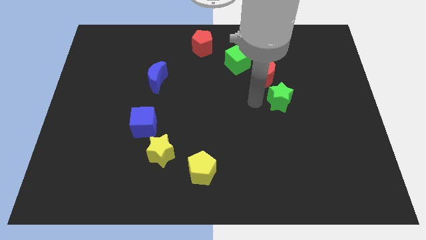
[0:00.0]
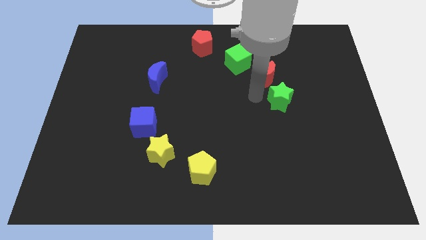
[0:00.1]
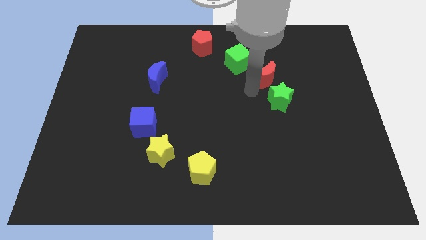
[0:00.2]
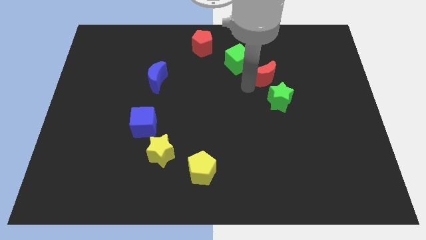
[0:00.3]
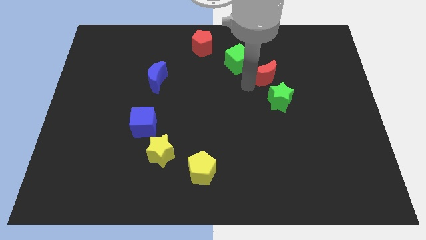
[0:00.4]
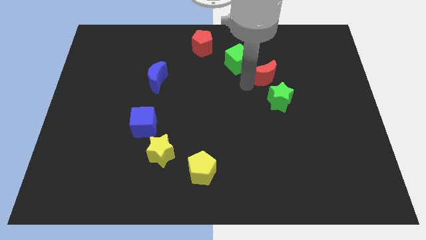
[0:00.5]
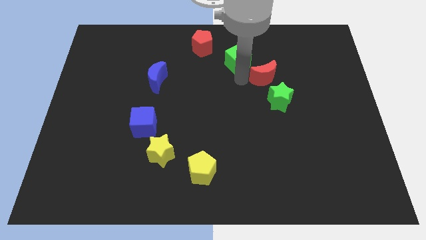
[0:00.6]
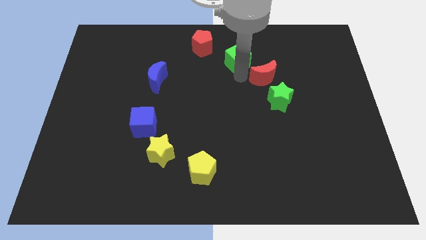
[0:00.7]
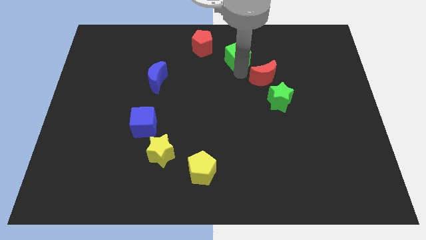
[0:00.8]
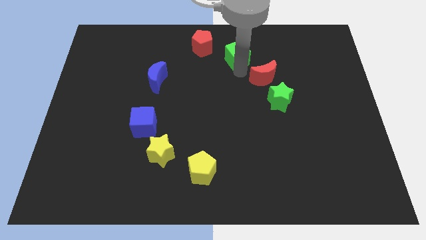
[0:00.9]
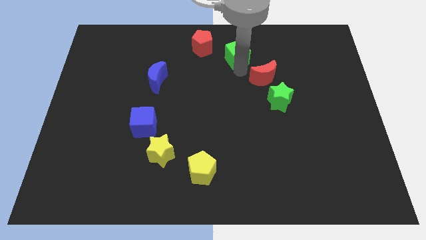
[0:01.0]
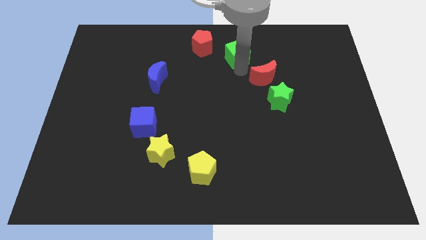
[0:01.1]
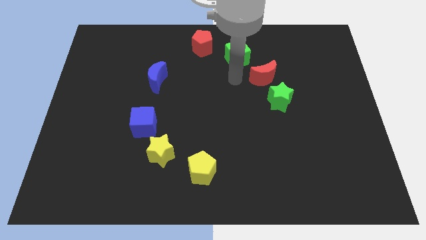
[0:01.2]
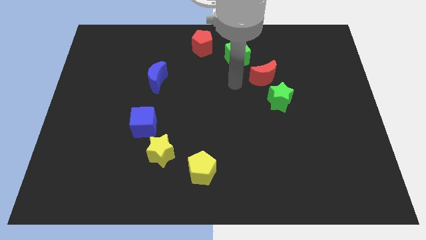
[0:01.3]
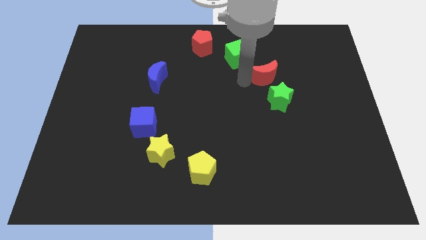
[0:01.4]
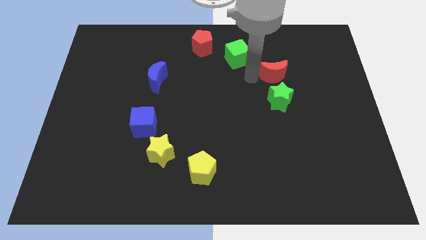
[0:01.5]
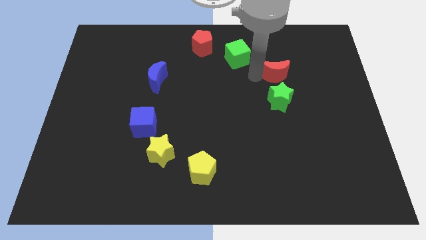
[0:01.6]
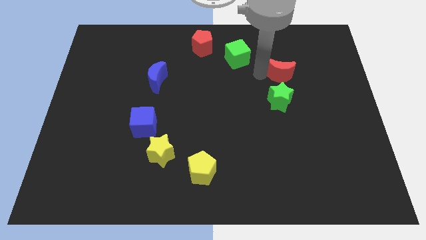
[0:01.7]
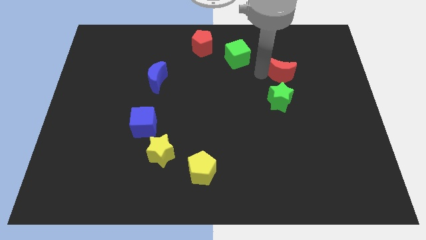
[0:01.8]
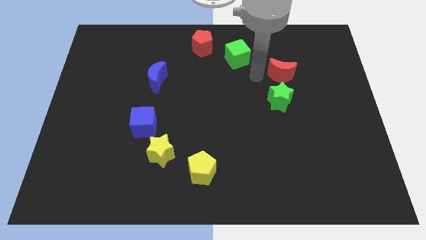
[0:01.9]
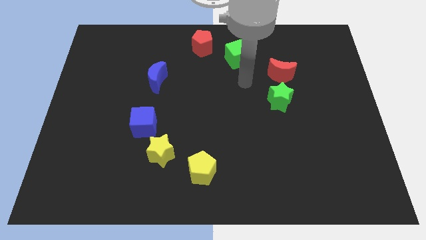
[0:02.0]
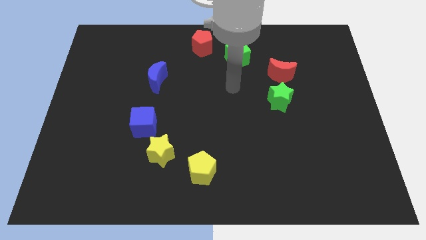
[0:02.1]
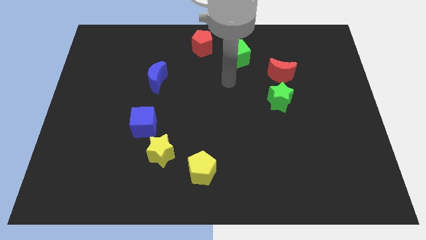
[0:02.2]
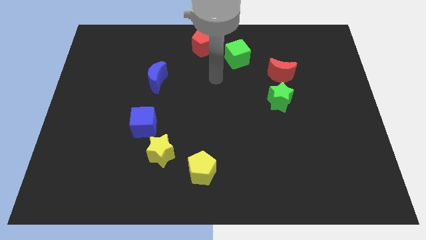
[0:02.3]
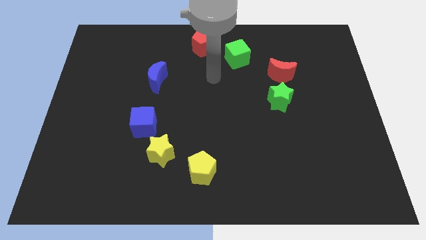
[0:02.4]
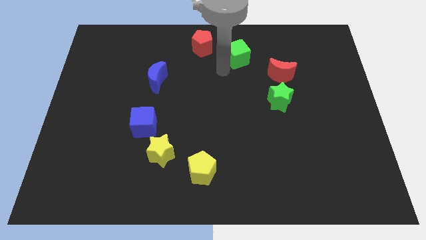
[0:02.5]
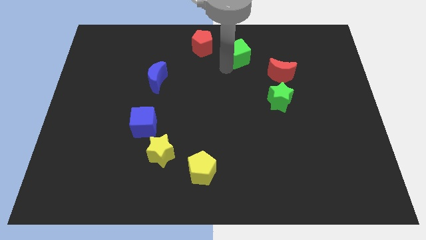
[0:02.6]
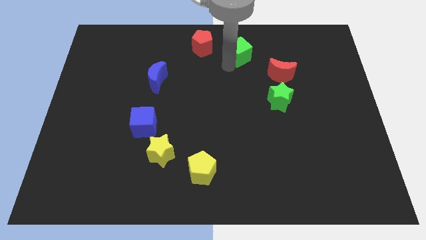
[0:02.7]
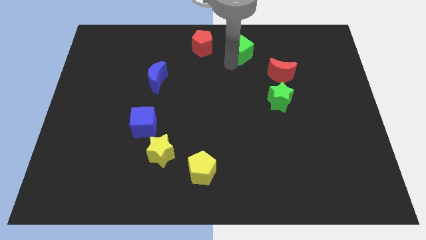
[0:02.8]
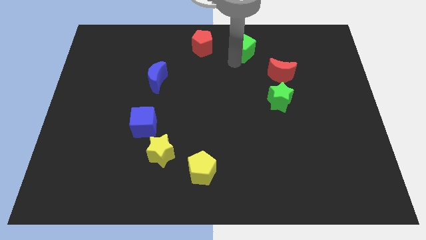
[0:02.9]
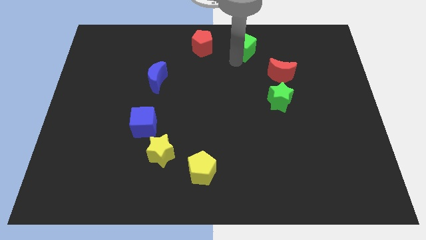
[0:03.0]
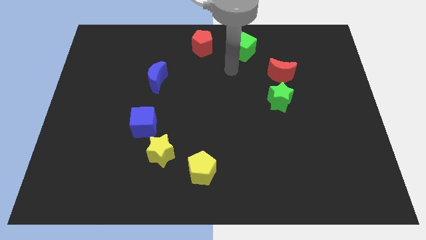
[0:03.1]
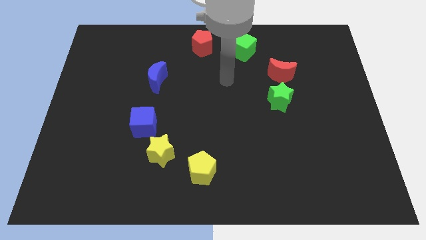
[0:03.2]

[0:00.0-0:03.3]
push the green cube slightly towards the top center

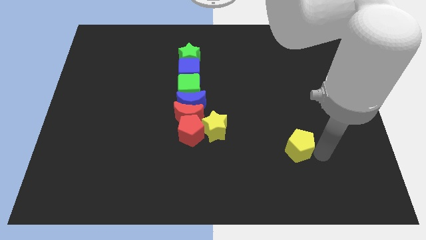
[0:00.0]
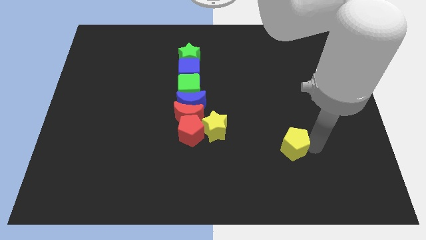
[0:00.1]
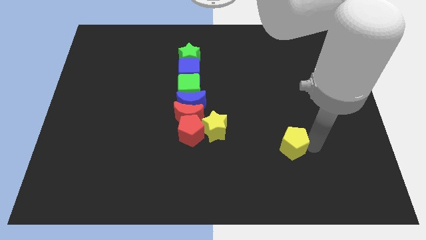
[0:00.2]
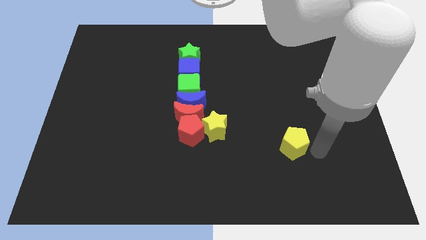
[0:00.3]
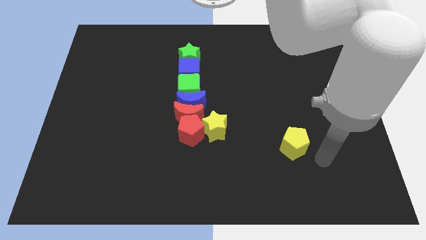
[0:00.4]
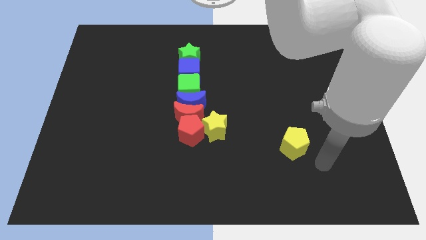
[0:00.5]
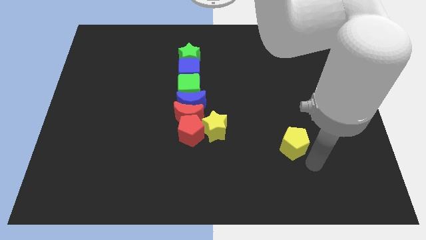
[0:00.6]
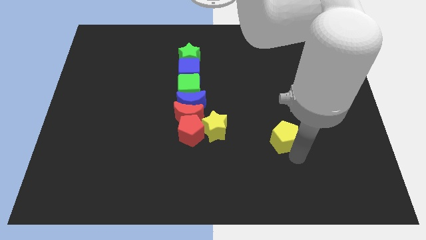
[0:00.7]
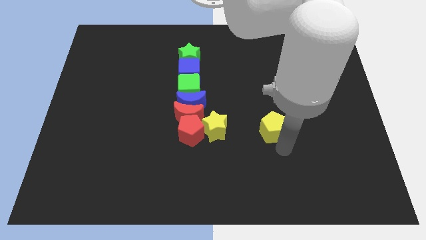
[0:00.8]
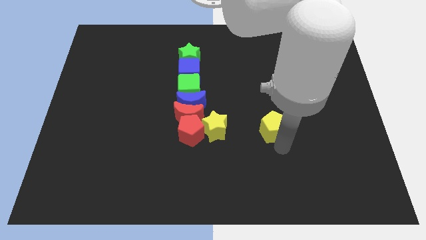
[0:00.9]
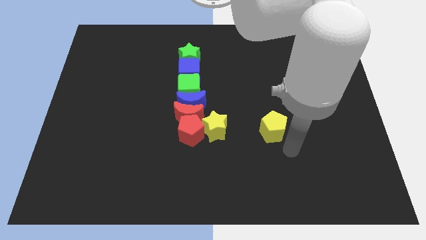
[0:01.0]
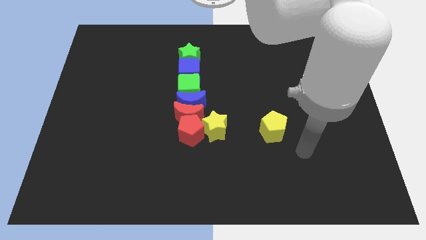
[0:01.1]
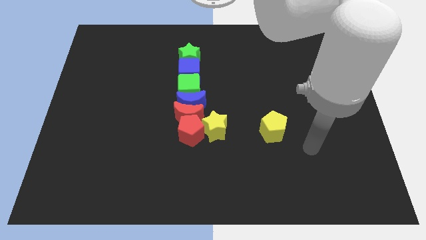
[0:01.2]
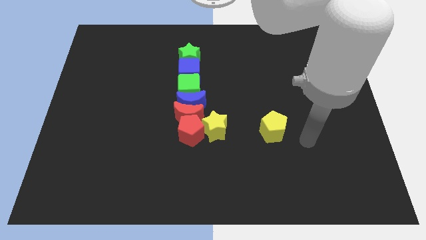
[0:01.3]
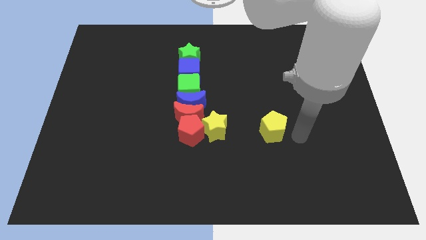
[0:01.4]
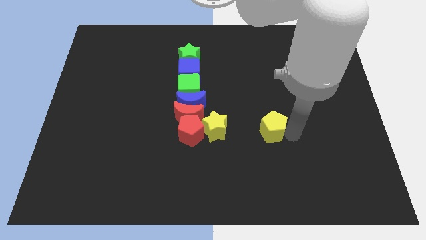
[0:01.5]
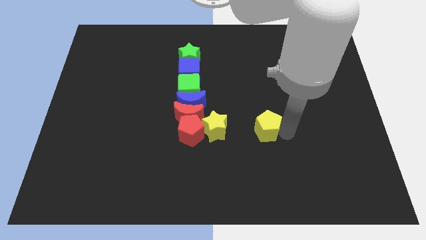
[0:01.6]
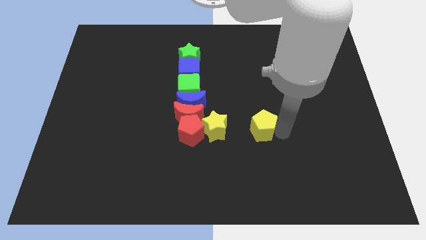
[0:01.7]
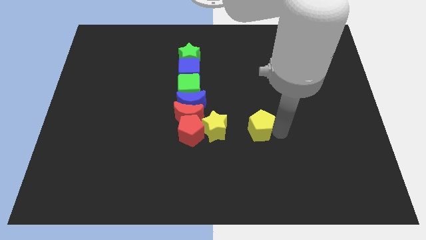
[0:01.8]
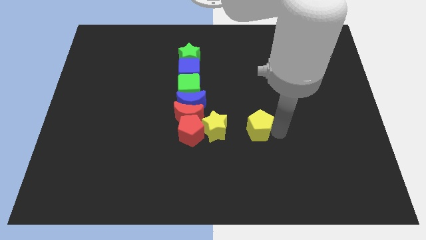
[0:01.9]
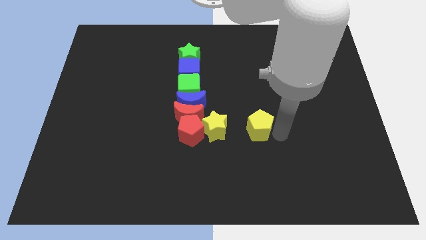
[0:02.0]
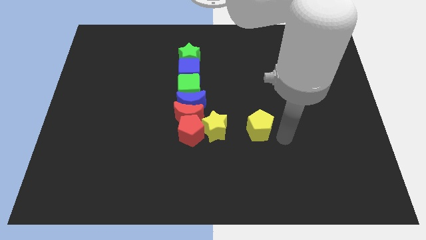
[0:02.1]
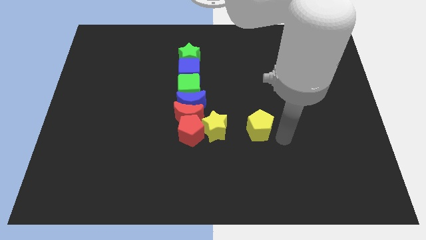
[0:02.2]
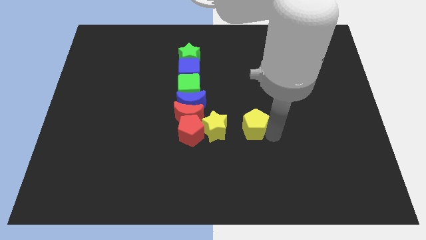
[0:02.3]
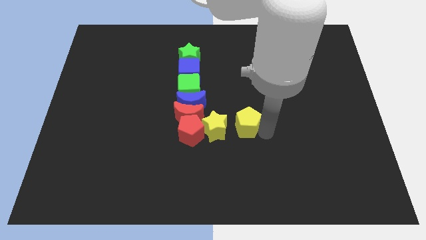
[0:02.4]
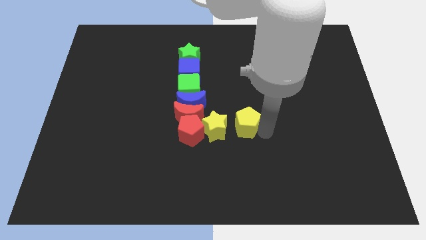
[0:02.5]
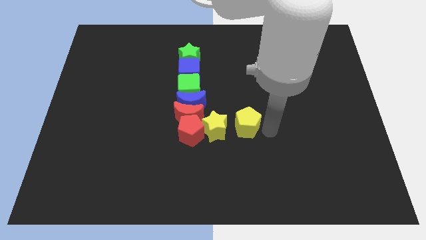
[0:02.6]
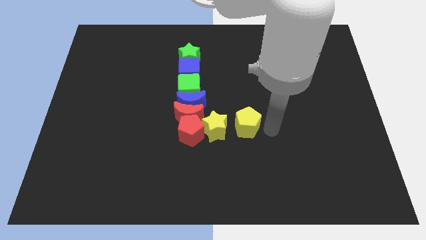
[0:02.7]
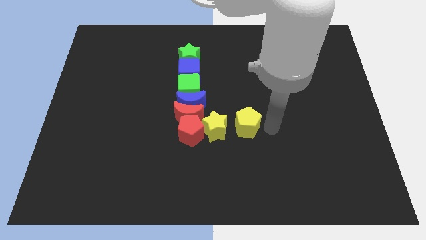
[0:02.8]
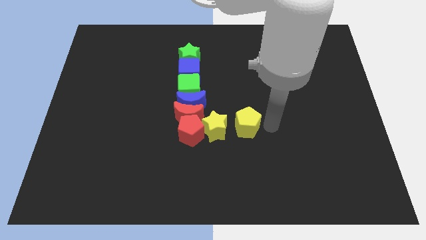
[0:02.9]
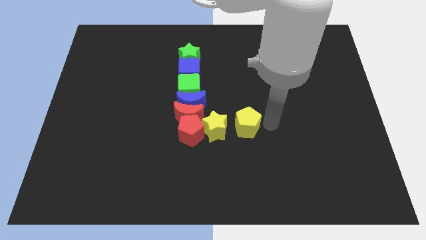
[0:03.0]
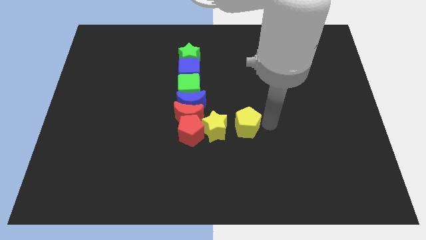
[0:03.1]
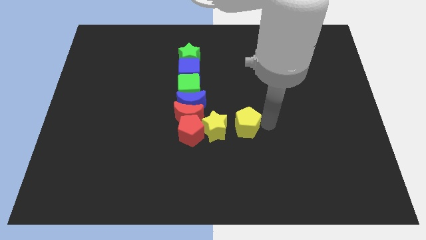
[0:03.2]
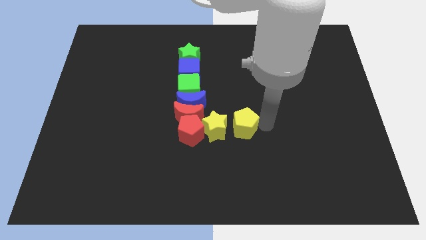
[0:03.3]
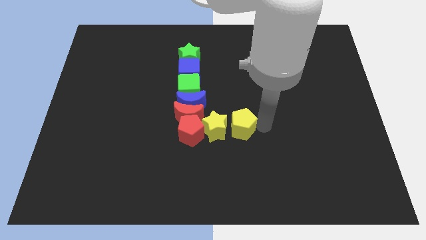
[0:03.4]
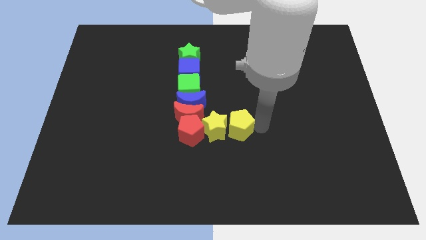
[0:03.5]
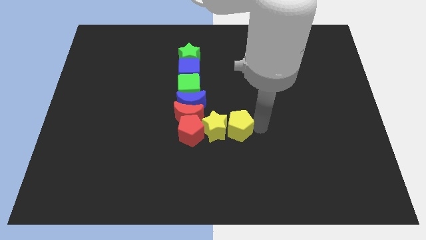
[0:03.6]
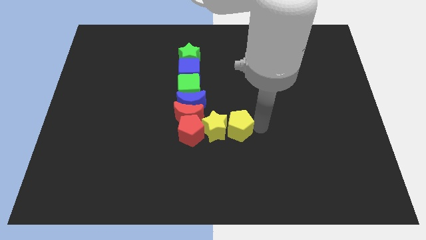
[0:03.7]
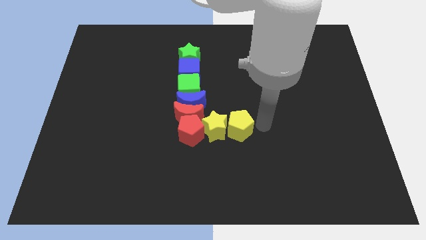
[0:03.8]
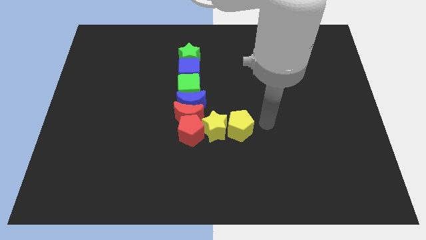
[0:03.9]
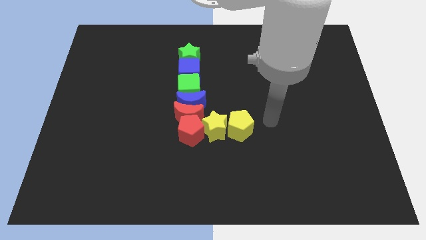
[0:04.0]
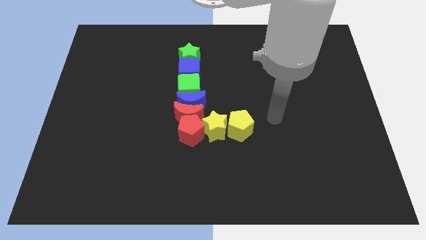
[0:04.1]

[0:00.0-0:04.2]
place yellow pentagon on the right side of the yellow star

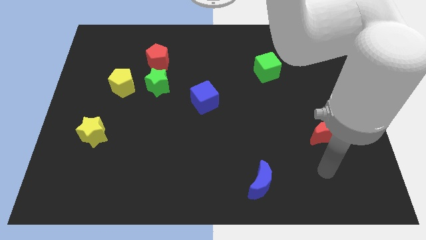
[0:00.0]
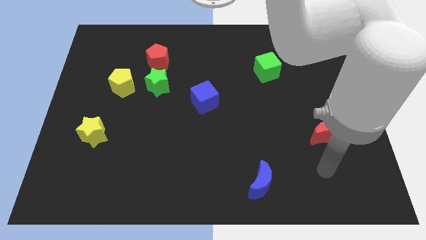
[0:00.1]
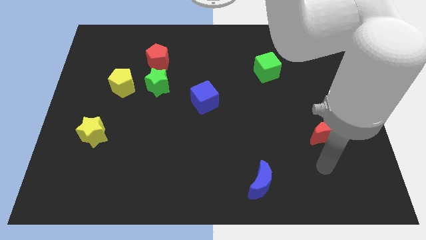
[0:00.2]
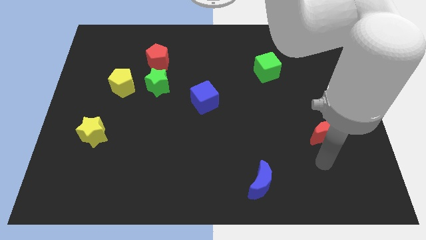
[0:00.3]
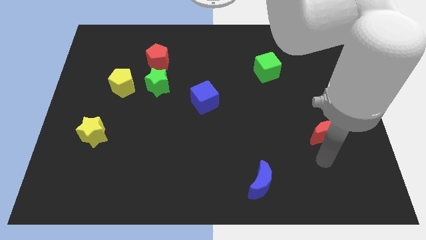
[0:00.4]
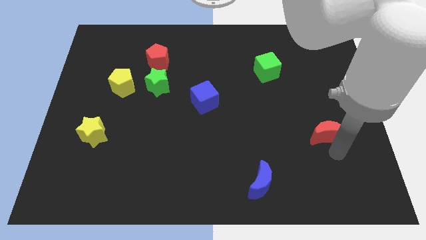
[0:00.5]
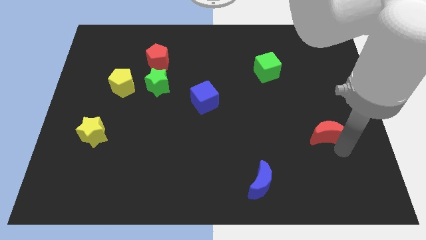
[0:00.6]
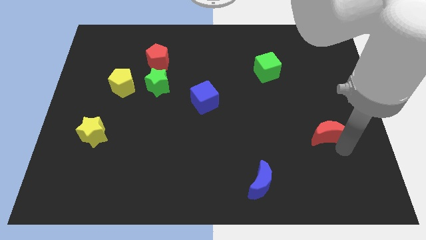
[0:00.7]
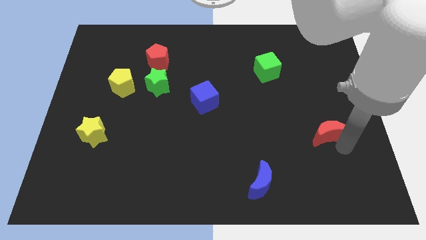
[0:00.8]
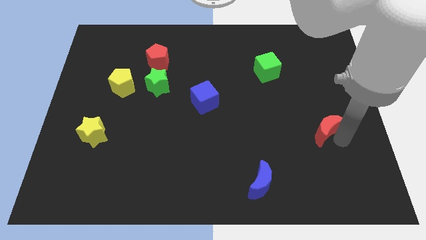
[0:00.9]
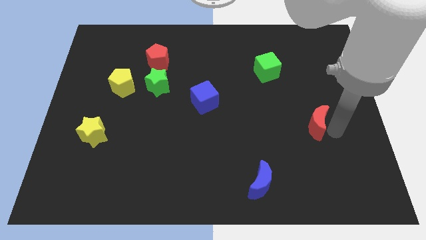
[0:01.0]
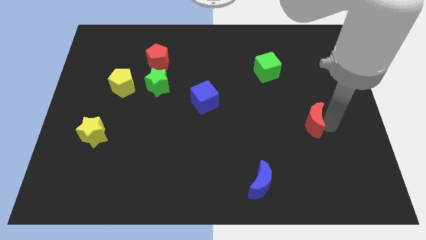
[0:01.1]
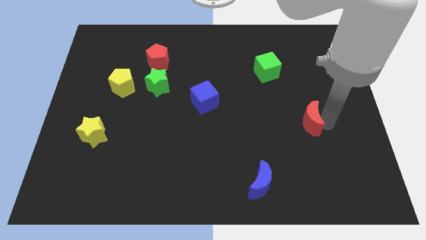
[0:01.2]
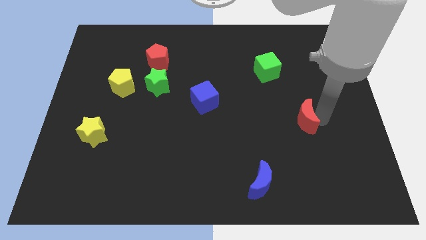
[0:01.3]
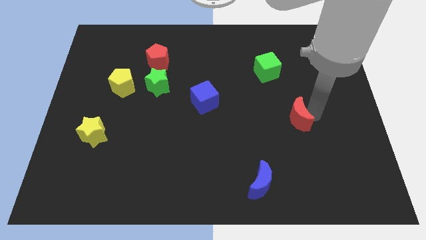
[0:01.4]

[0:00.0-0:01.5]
move red moon slightly upwards
